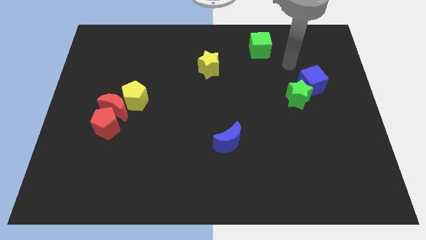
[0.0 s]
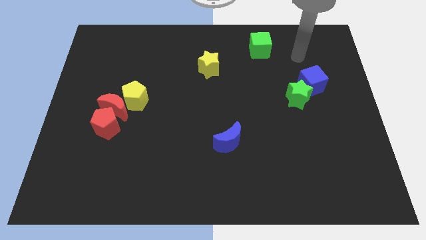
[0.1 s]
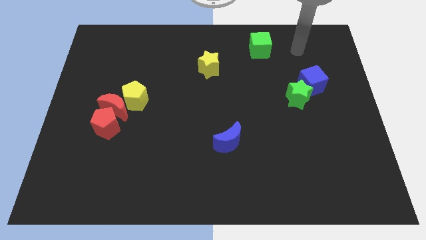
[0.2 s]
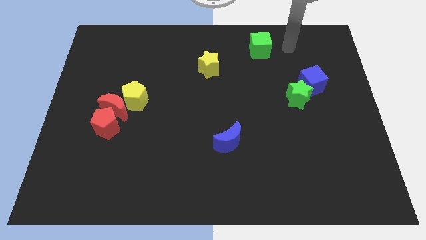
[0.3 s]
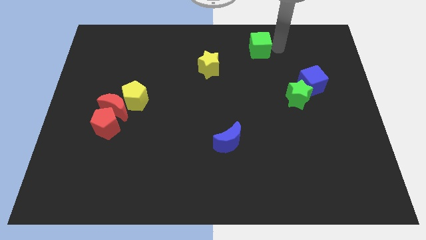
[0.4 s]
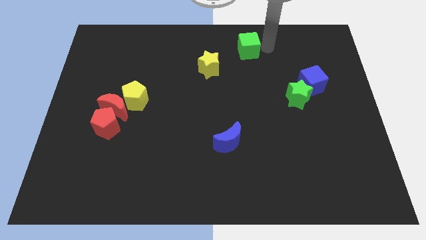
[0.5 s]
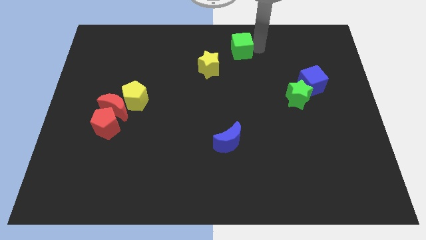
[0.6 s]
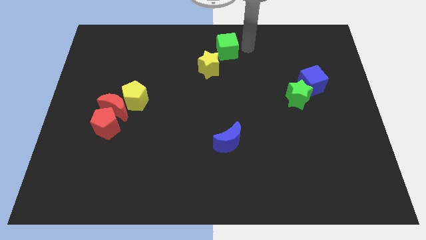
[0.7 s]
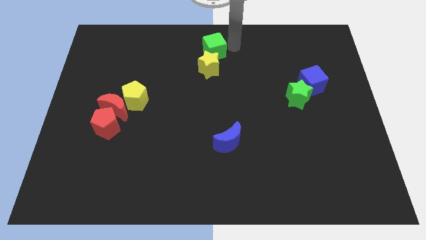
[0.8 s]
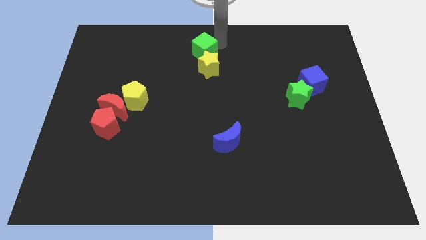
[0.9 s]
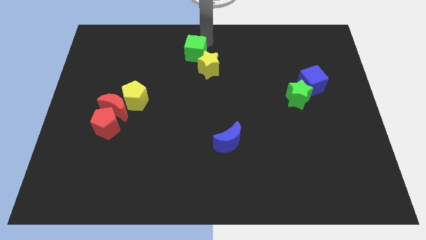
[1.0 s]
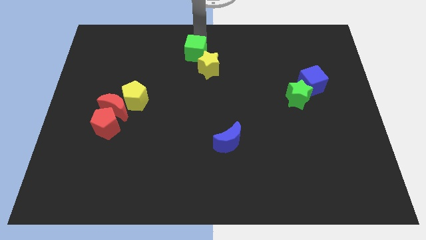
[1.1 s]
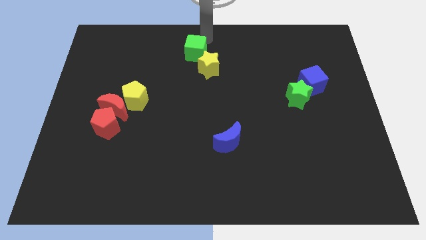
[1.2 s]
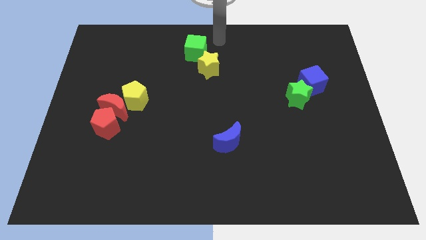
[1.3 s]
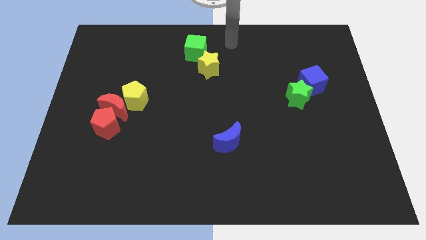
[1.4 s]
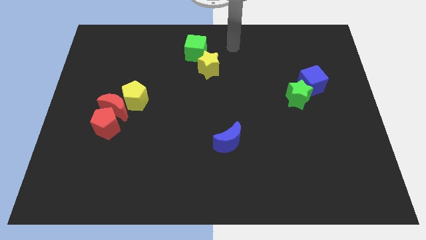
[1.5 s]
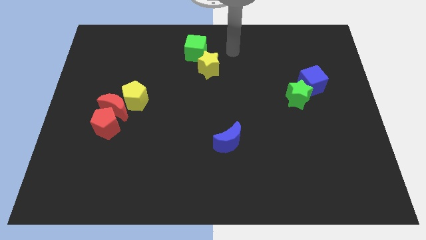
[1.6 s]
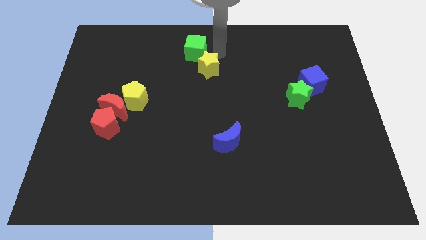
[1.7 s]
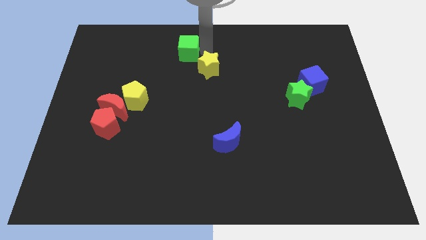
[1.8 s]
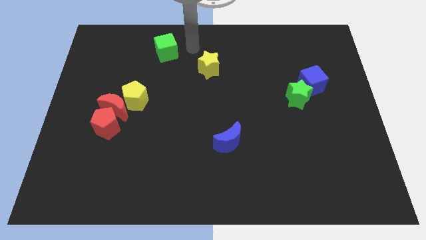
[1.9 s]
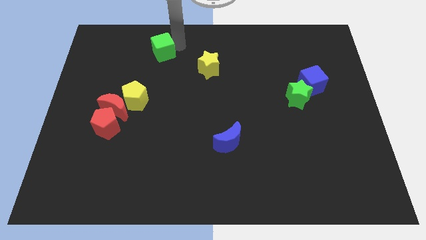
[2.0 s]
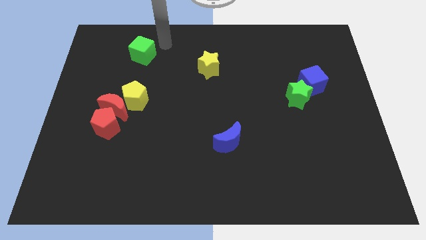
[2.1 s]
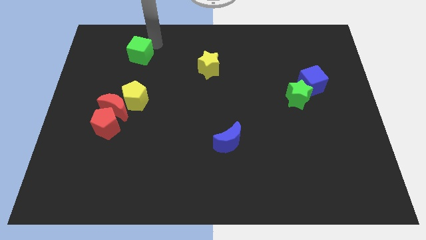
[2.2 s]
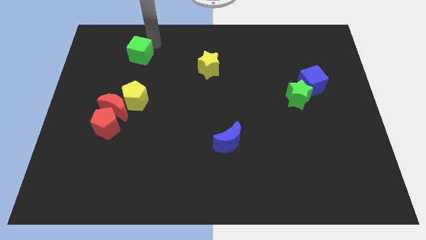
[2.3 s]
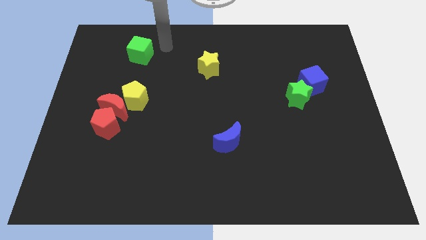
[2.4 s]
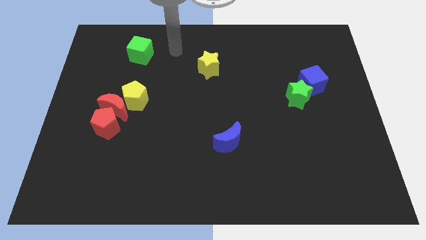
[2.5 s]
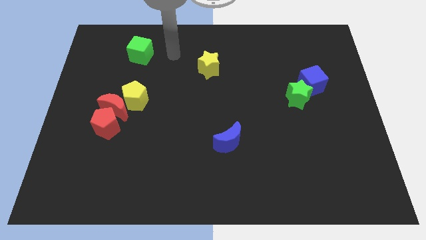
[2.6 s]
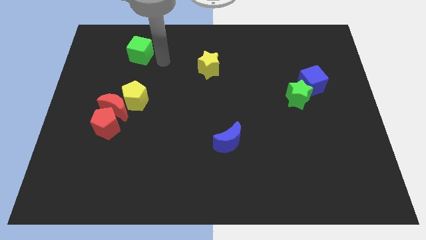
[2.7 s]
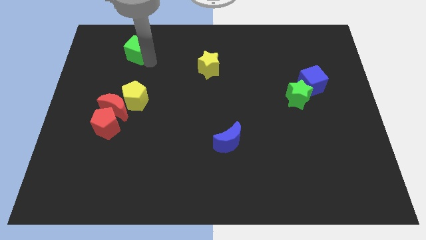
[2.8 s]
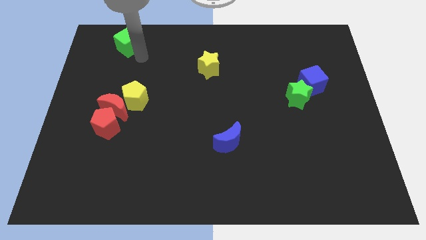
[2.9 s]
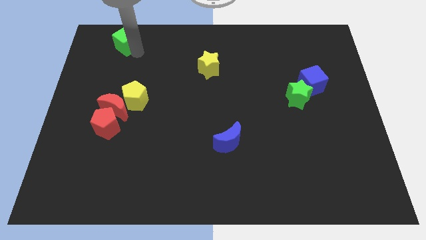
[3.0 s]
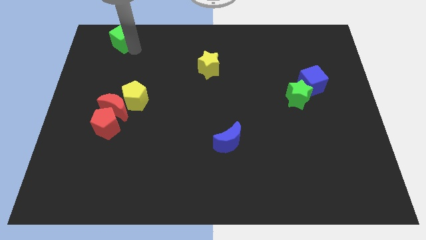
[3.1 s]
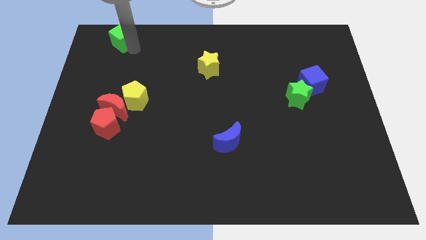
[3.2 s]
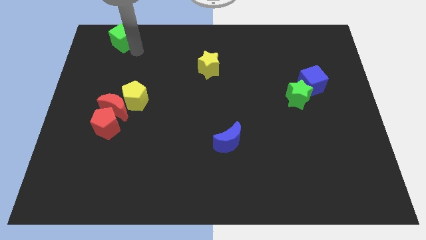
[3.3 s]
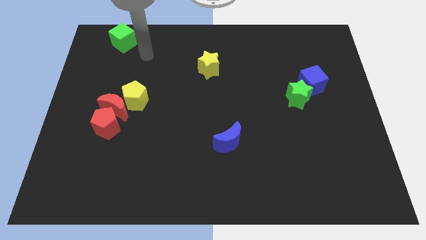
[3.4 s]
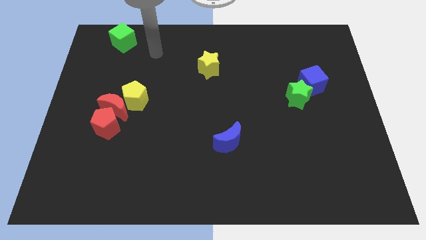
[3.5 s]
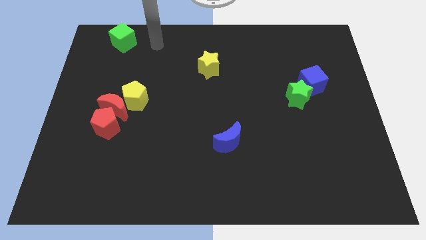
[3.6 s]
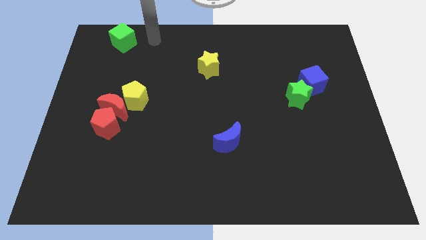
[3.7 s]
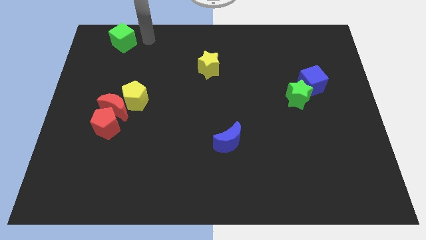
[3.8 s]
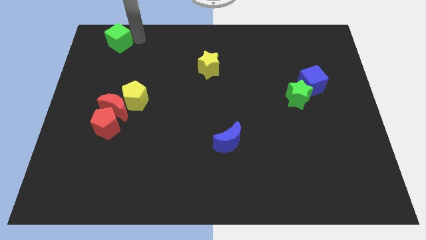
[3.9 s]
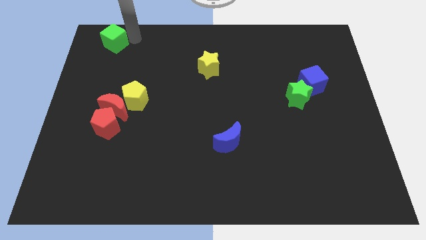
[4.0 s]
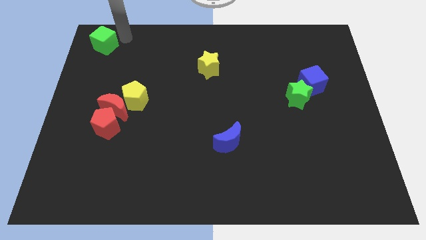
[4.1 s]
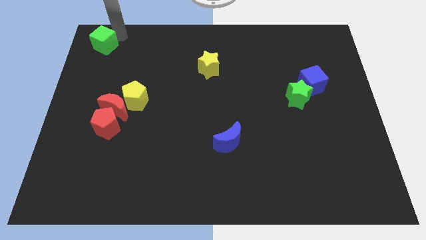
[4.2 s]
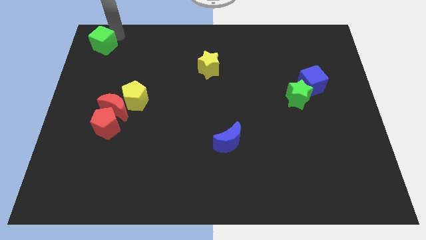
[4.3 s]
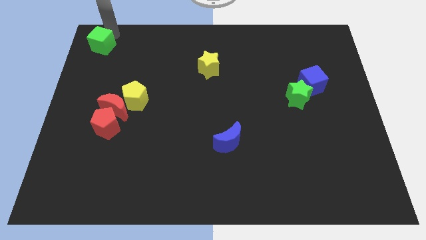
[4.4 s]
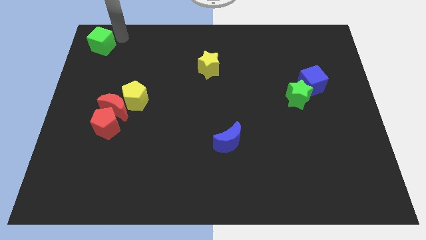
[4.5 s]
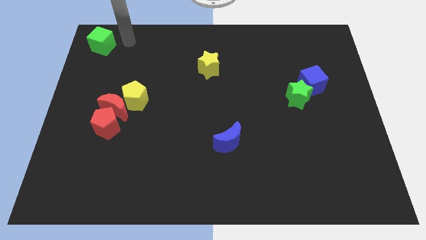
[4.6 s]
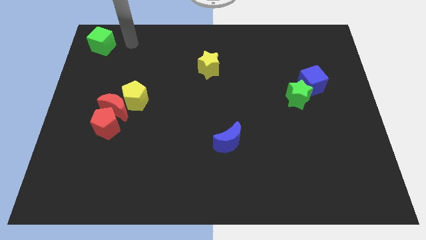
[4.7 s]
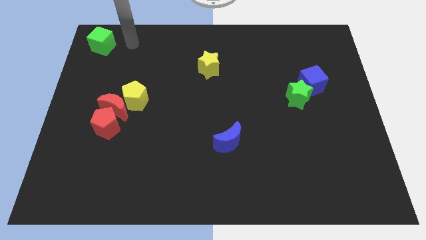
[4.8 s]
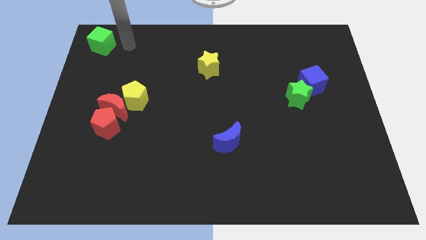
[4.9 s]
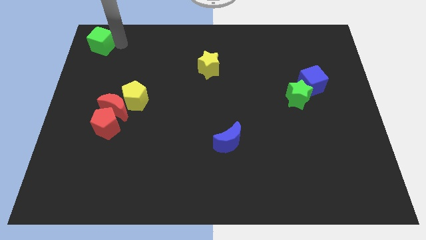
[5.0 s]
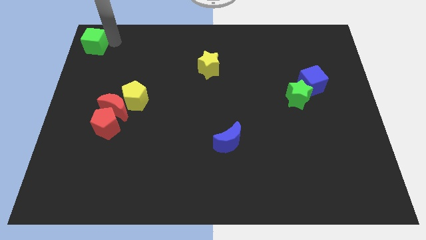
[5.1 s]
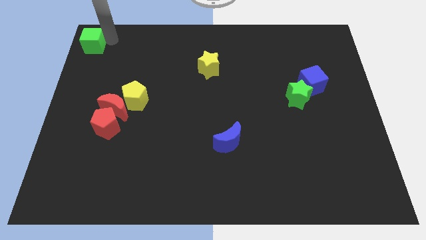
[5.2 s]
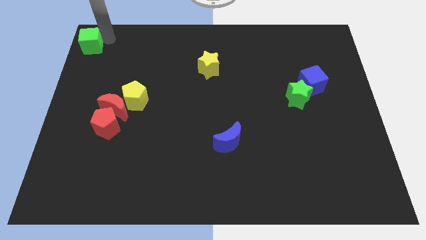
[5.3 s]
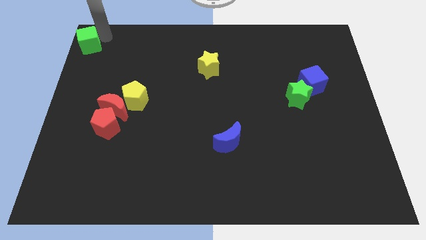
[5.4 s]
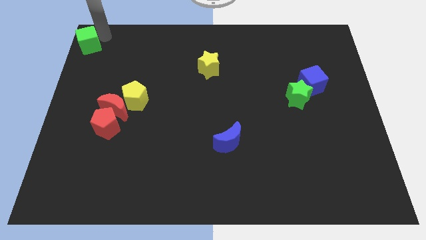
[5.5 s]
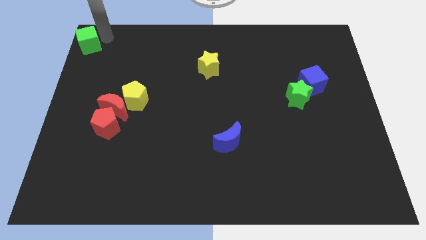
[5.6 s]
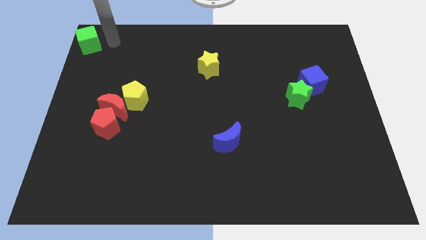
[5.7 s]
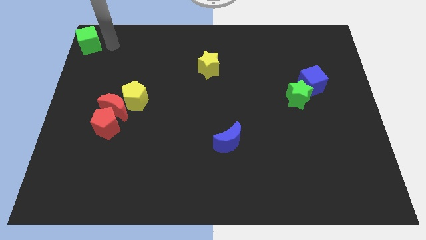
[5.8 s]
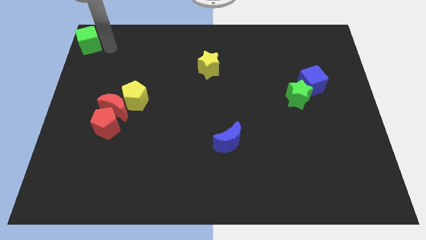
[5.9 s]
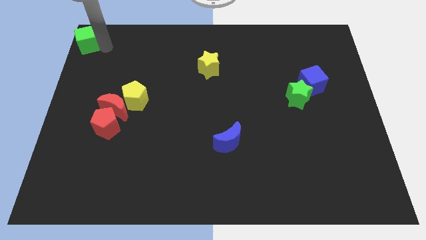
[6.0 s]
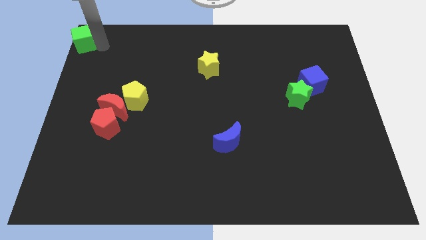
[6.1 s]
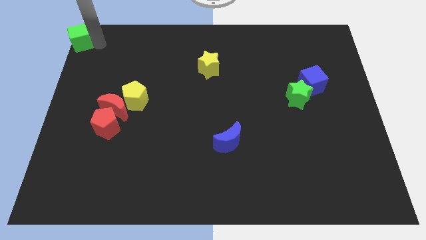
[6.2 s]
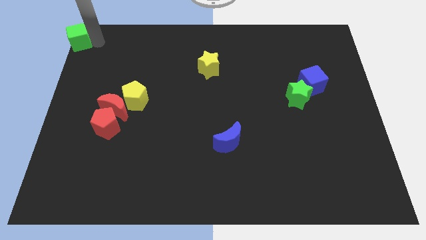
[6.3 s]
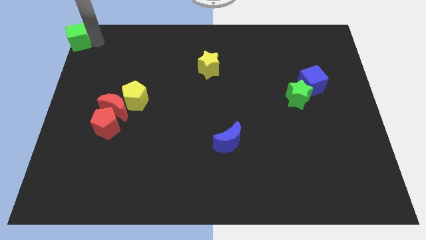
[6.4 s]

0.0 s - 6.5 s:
move the green cube towards the top left corner of the board

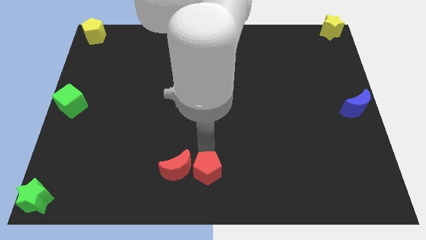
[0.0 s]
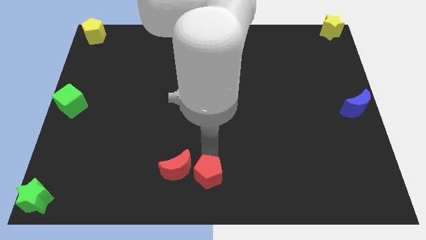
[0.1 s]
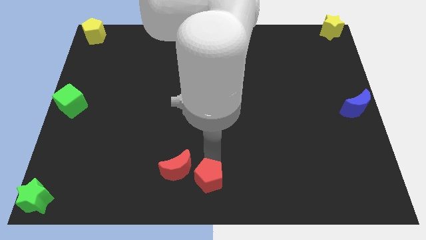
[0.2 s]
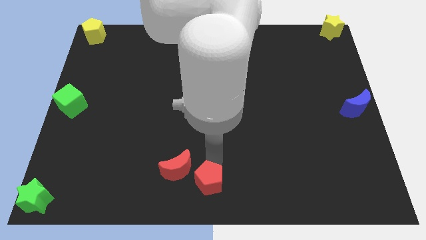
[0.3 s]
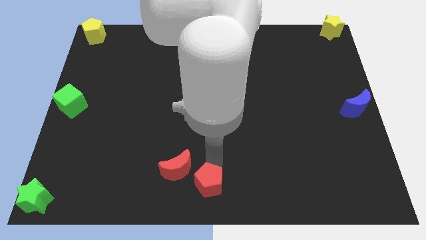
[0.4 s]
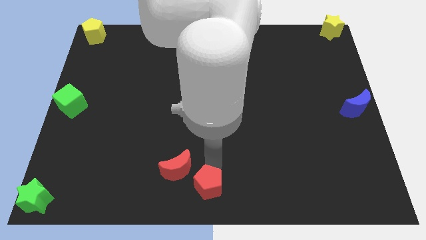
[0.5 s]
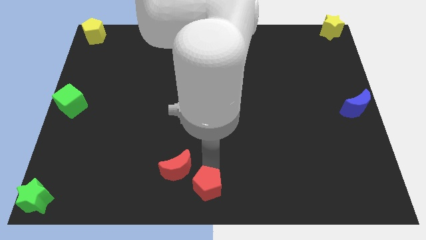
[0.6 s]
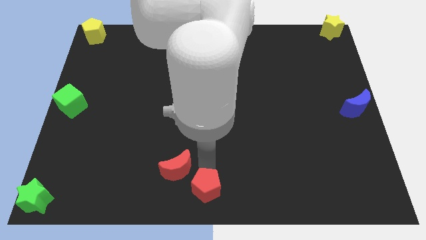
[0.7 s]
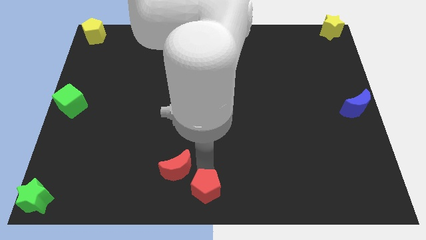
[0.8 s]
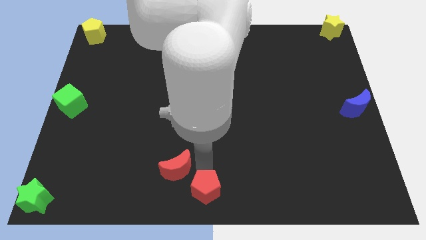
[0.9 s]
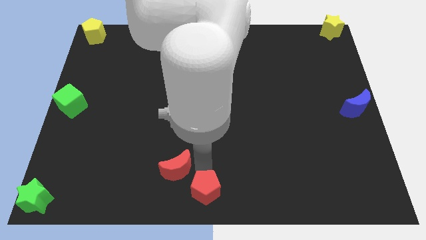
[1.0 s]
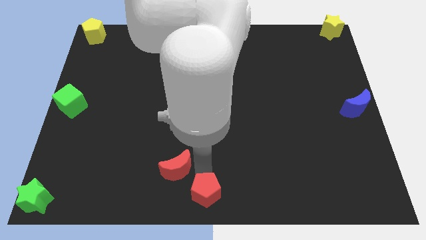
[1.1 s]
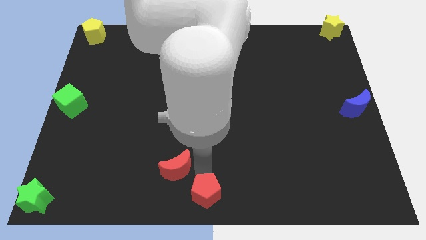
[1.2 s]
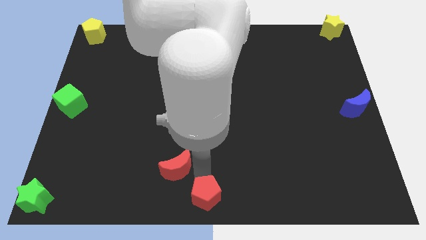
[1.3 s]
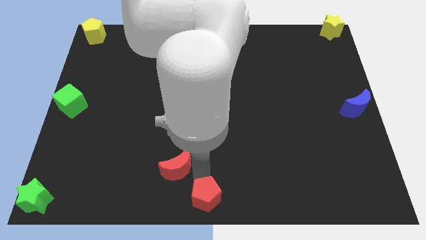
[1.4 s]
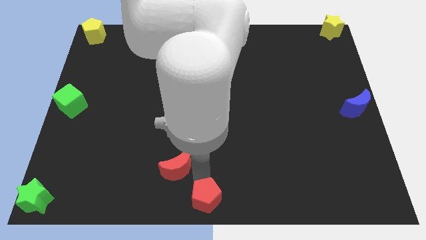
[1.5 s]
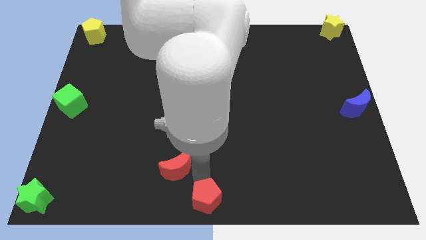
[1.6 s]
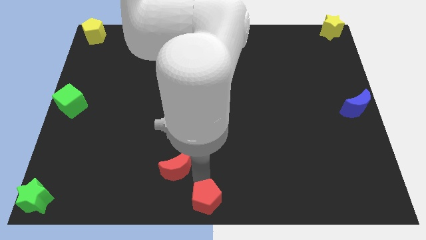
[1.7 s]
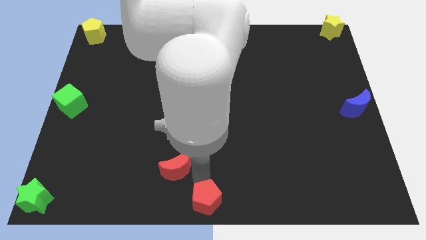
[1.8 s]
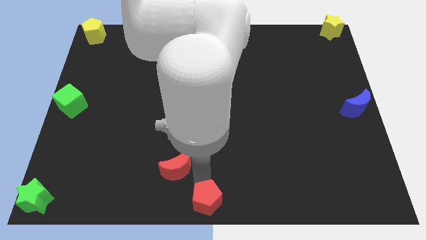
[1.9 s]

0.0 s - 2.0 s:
move the red pentagon to the bottom center of the board

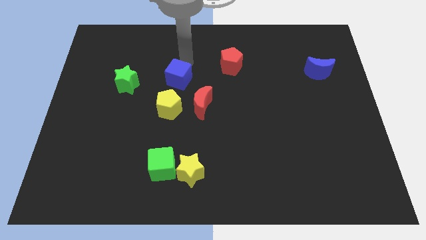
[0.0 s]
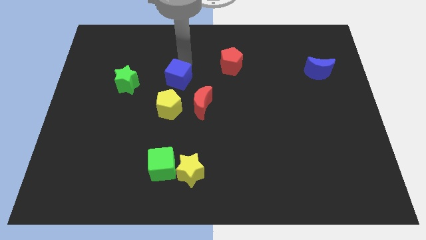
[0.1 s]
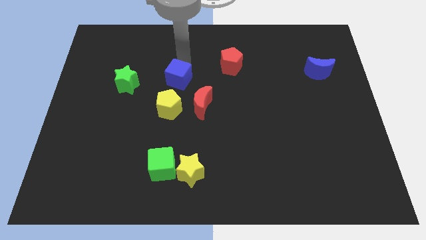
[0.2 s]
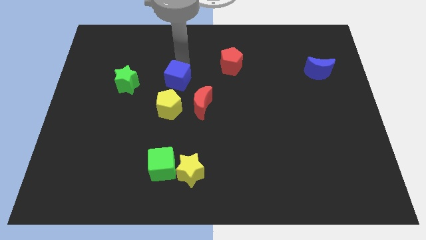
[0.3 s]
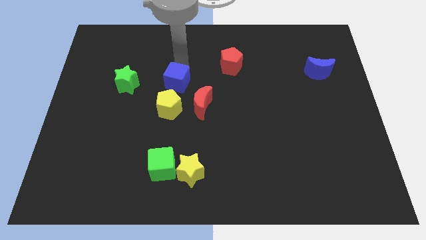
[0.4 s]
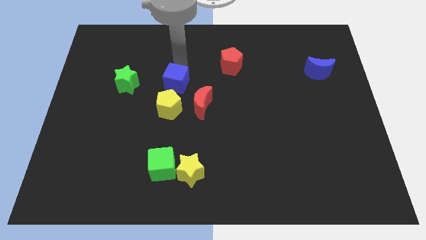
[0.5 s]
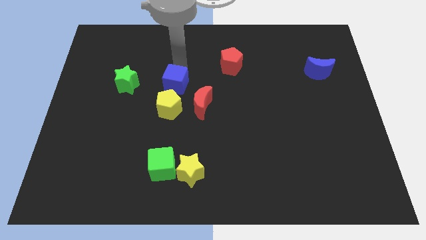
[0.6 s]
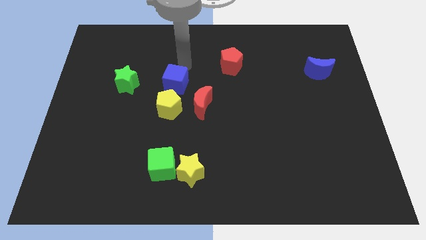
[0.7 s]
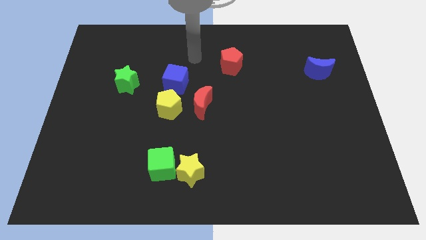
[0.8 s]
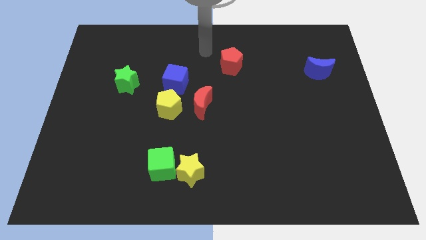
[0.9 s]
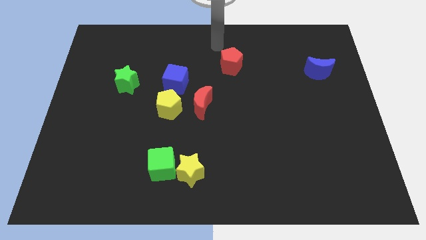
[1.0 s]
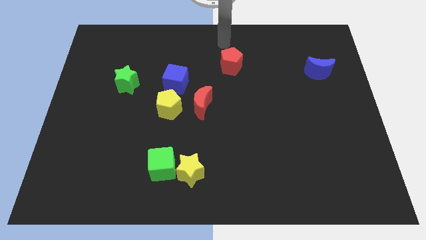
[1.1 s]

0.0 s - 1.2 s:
place the blue cube to the top of yellow pentagon
